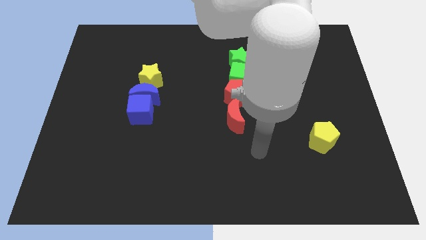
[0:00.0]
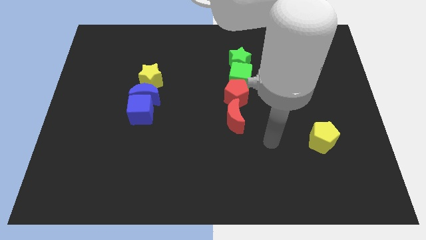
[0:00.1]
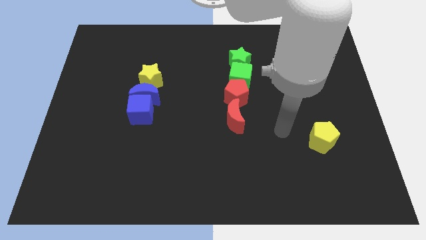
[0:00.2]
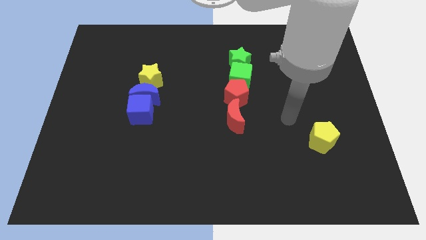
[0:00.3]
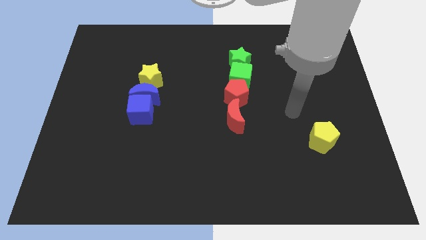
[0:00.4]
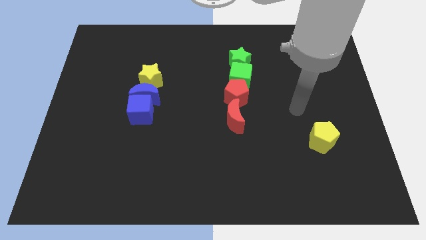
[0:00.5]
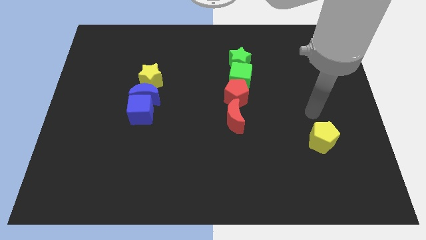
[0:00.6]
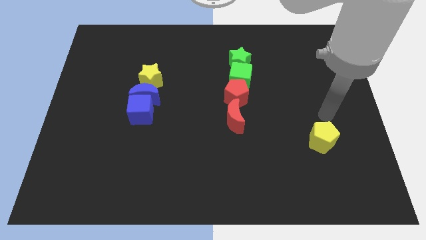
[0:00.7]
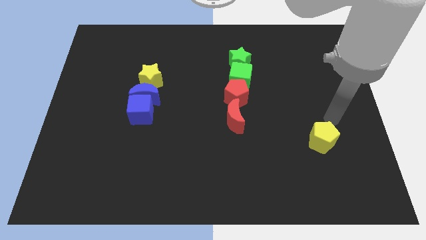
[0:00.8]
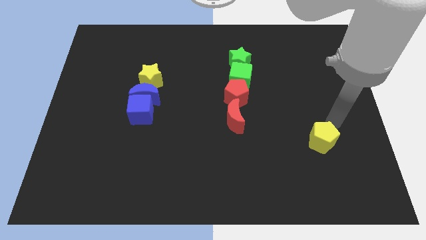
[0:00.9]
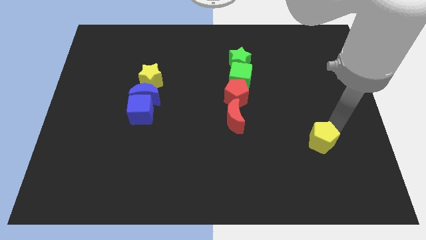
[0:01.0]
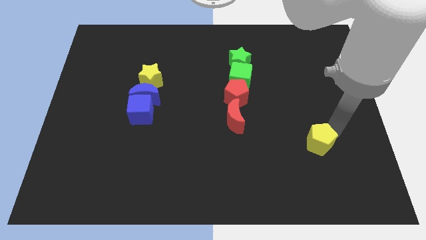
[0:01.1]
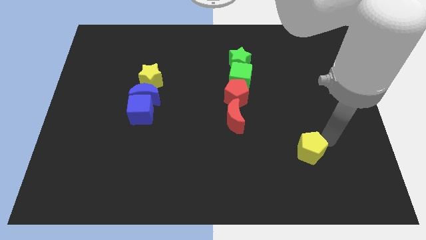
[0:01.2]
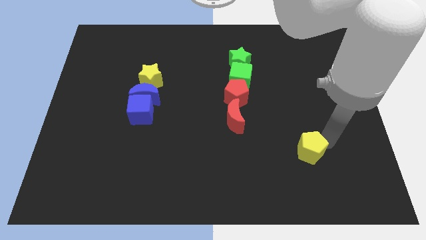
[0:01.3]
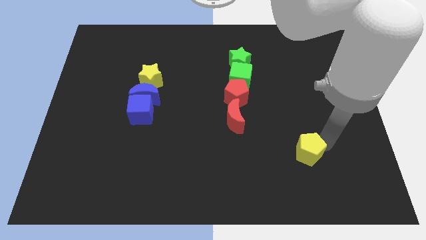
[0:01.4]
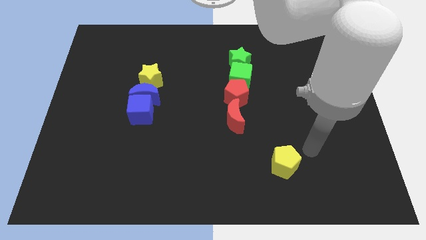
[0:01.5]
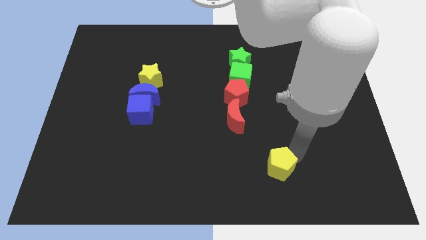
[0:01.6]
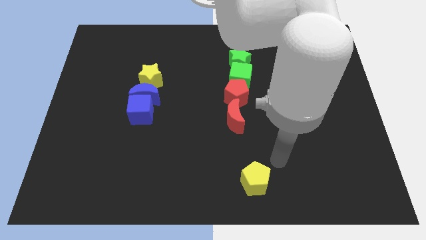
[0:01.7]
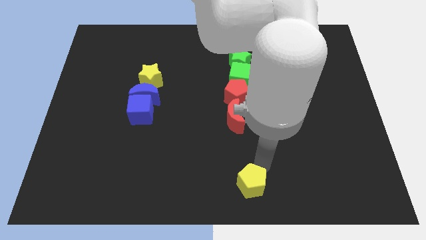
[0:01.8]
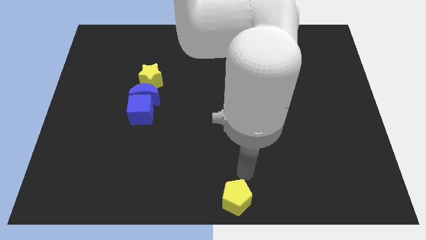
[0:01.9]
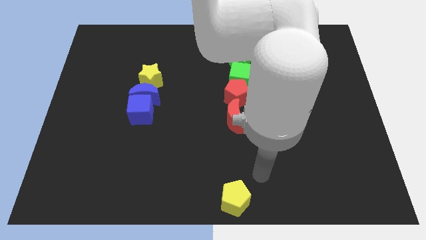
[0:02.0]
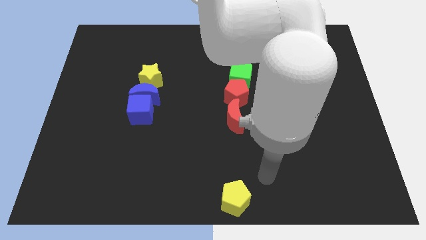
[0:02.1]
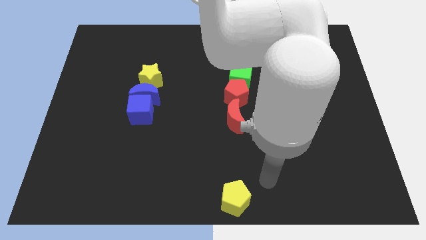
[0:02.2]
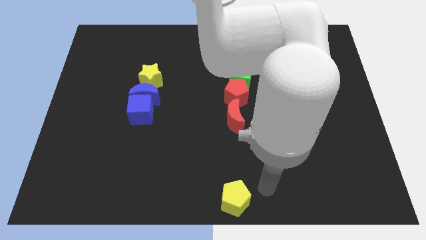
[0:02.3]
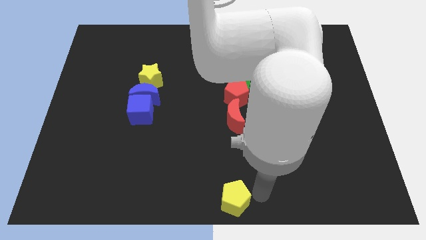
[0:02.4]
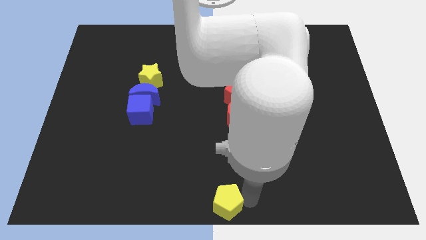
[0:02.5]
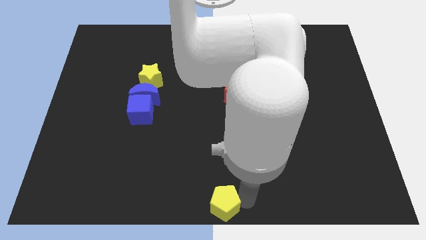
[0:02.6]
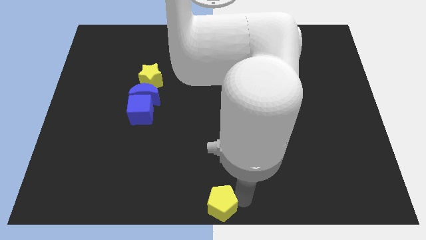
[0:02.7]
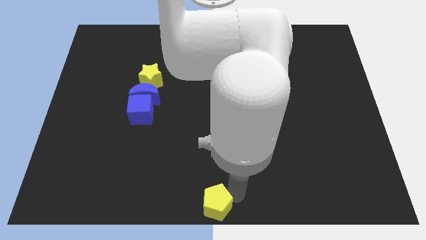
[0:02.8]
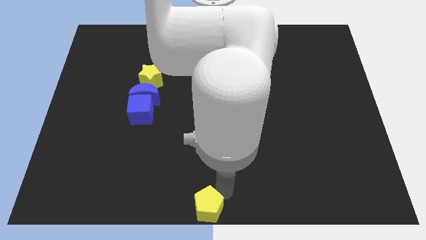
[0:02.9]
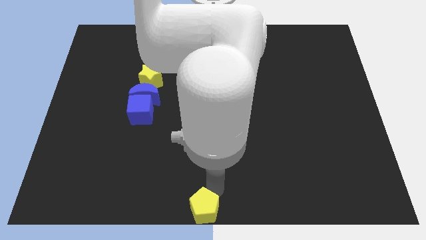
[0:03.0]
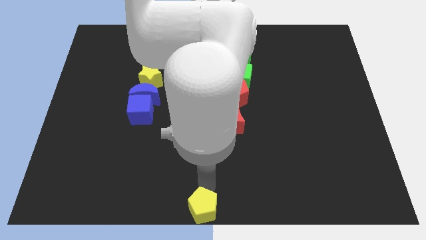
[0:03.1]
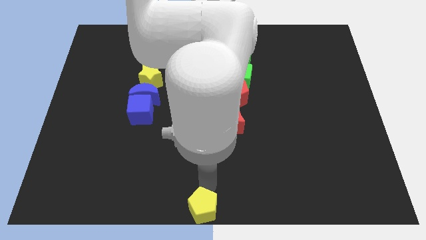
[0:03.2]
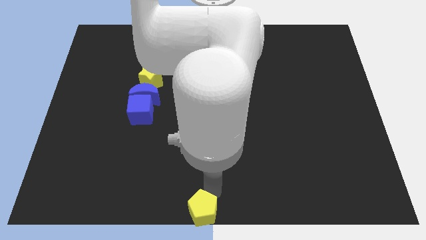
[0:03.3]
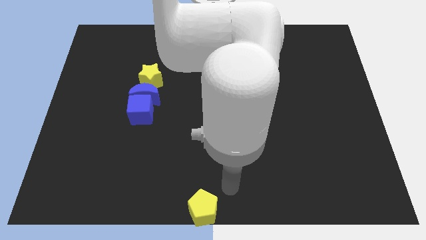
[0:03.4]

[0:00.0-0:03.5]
place the yellow pentagon at the bottom center of the board

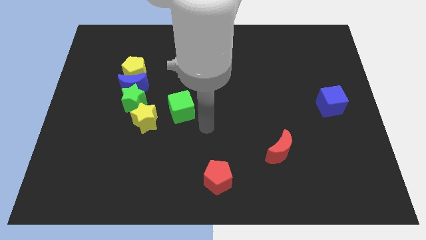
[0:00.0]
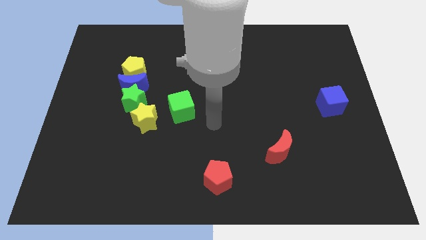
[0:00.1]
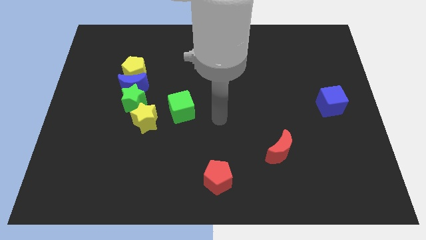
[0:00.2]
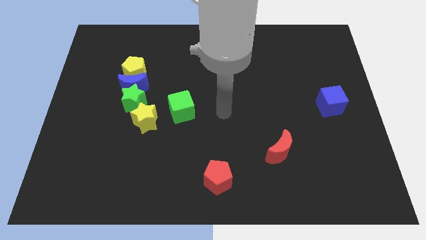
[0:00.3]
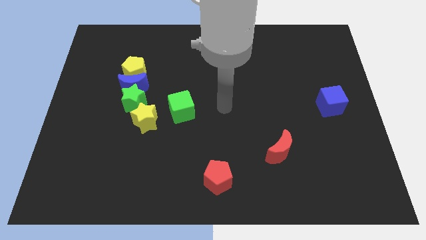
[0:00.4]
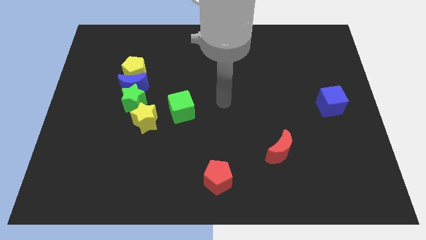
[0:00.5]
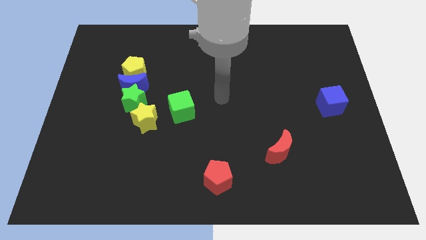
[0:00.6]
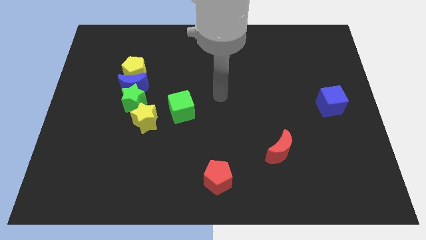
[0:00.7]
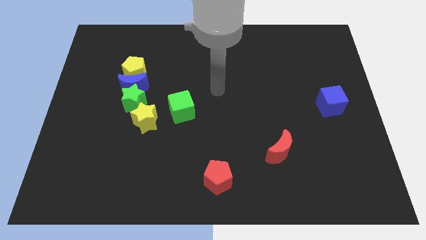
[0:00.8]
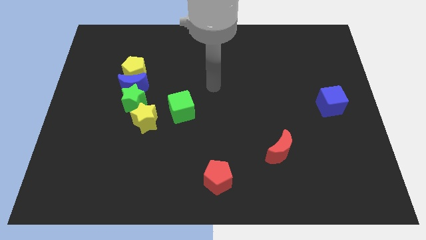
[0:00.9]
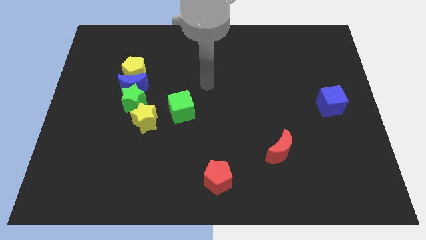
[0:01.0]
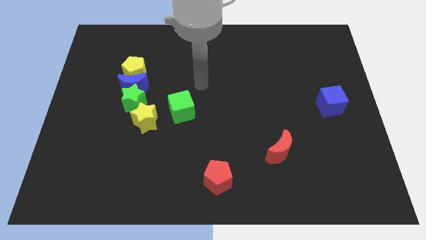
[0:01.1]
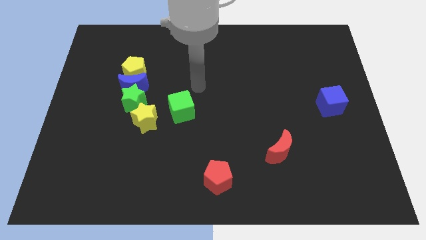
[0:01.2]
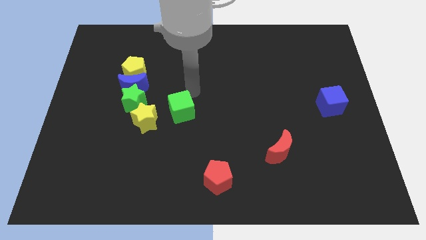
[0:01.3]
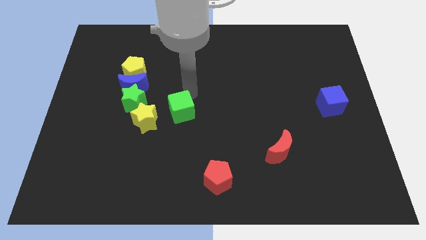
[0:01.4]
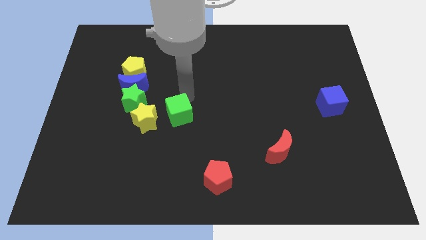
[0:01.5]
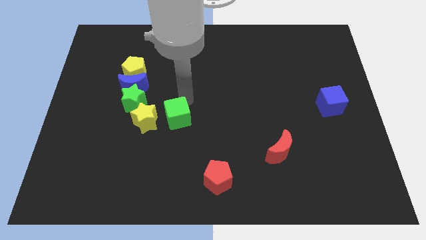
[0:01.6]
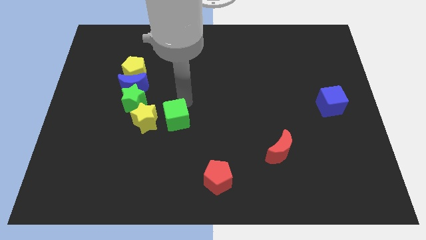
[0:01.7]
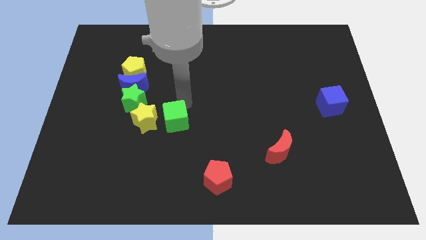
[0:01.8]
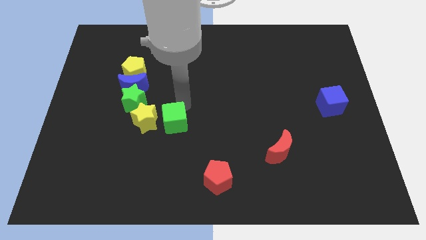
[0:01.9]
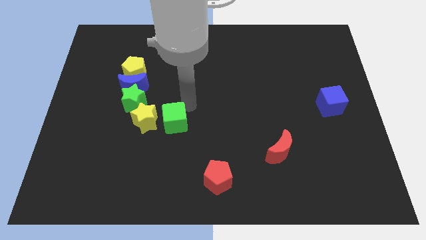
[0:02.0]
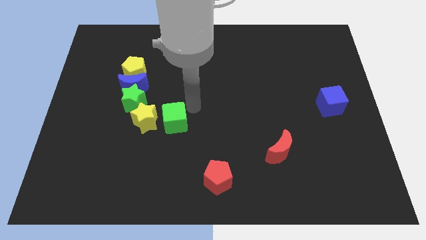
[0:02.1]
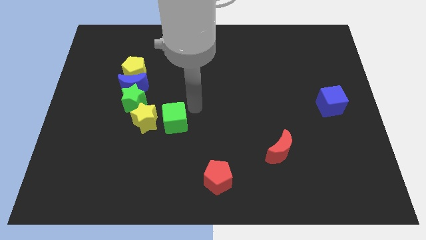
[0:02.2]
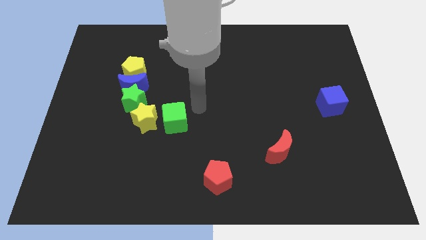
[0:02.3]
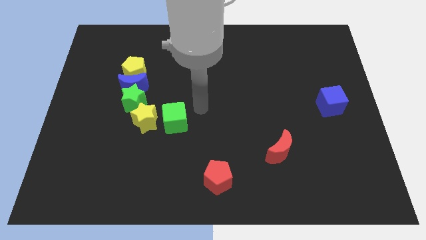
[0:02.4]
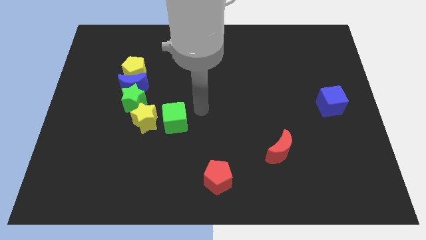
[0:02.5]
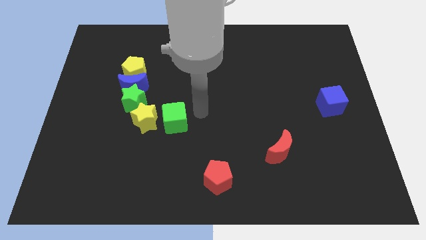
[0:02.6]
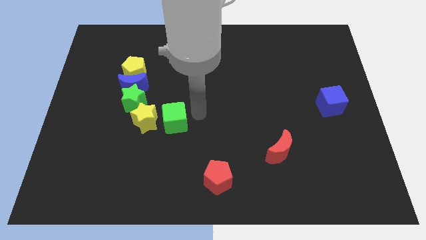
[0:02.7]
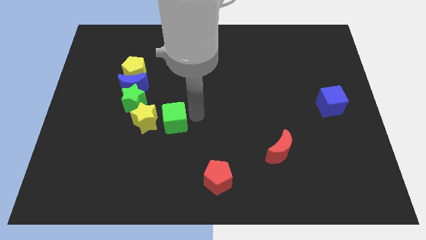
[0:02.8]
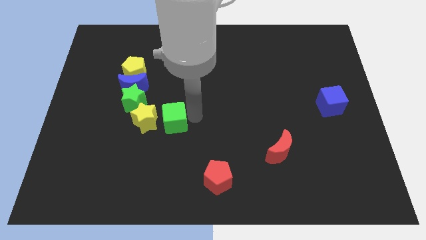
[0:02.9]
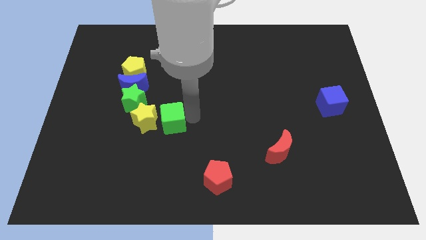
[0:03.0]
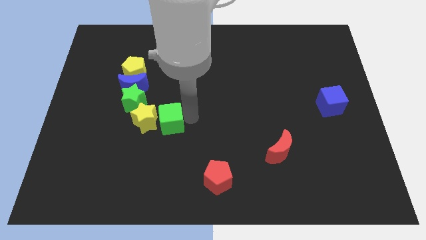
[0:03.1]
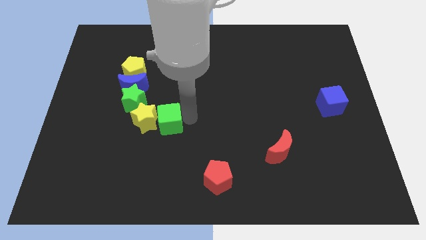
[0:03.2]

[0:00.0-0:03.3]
move the green cube to the right of the yellow star

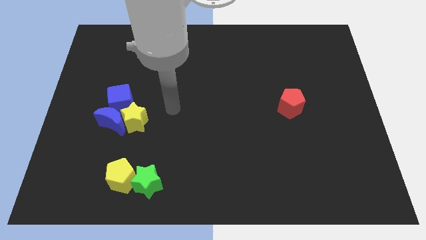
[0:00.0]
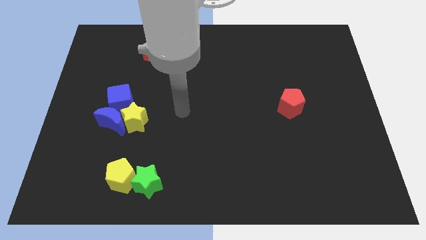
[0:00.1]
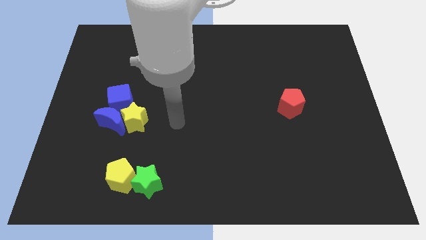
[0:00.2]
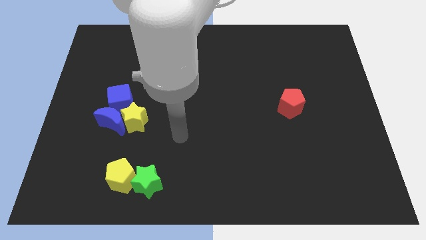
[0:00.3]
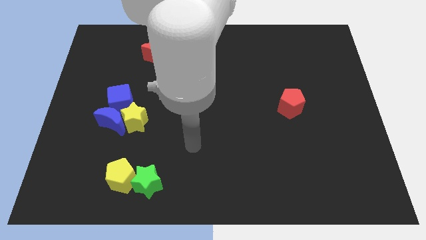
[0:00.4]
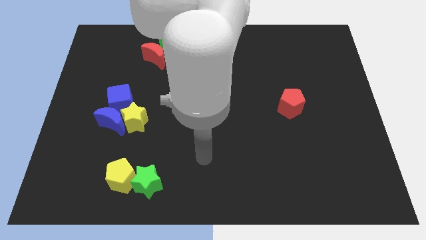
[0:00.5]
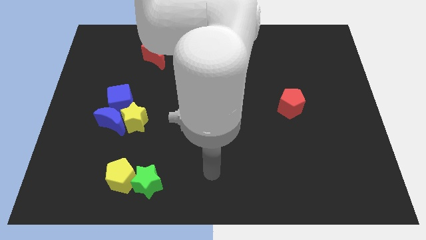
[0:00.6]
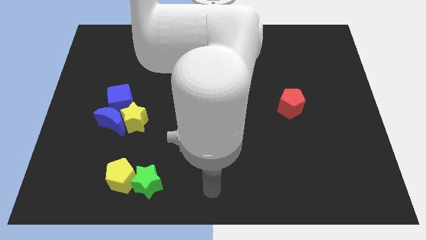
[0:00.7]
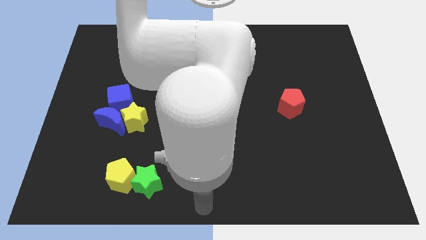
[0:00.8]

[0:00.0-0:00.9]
move your arm to the bottom center

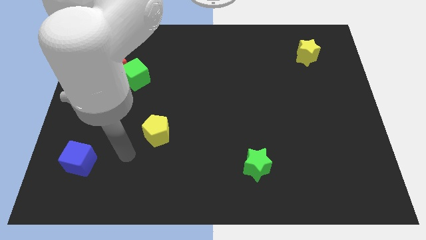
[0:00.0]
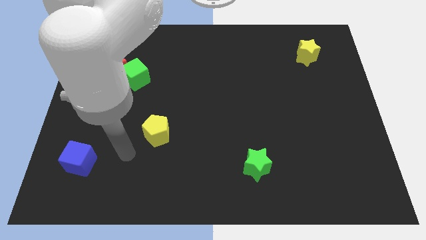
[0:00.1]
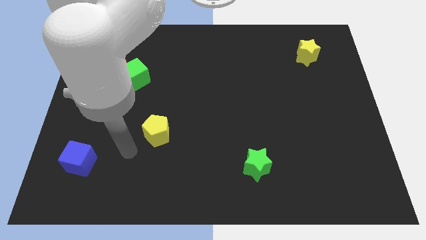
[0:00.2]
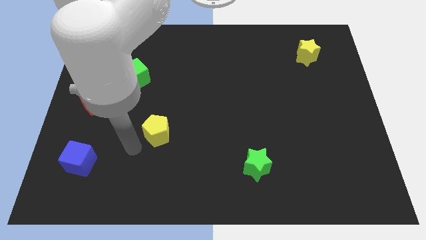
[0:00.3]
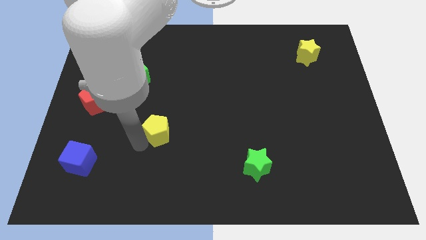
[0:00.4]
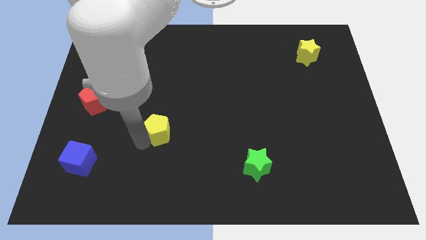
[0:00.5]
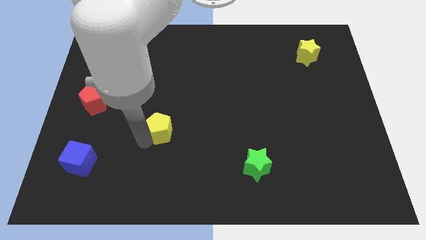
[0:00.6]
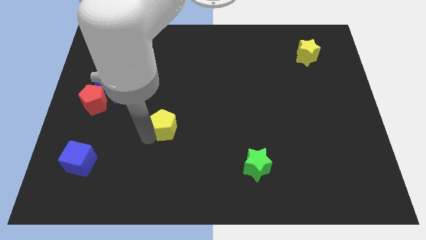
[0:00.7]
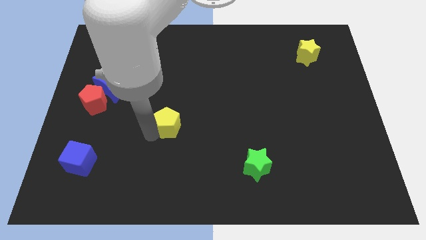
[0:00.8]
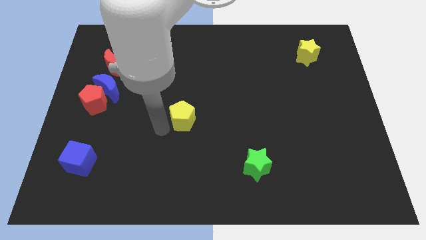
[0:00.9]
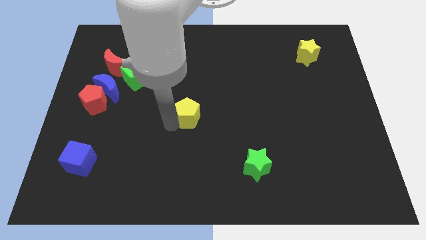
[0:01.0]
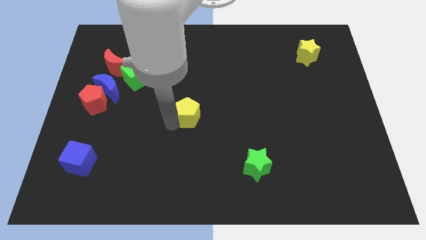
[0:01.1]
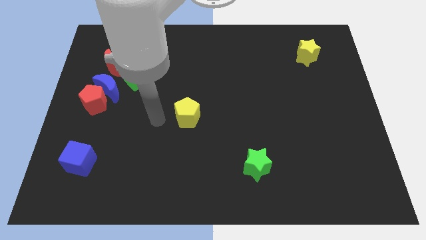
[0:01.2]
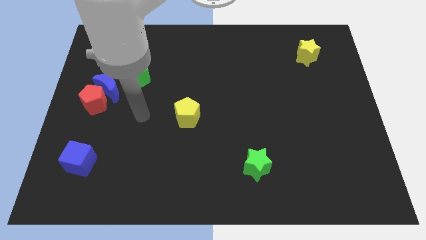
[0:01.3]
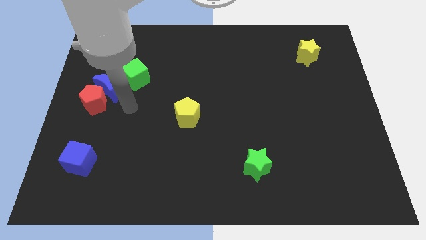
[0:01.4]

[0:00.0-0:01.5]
place the yellow pentagon in between green cube and green star
